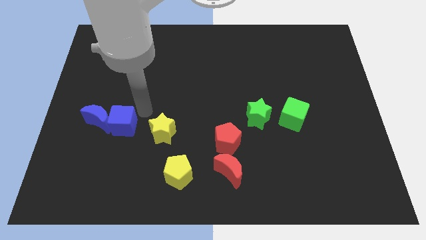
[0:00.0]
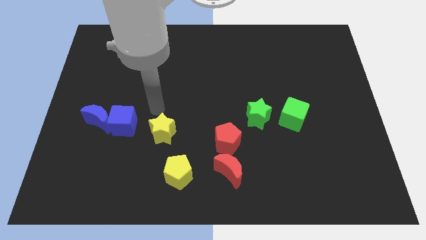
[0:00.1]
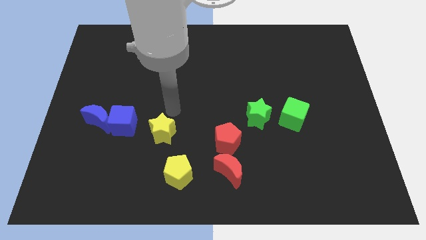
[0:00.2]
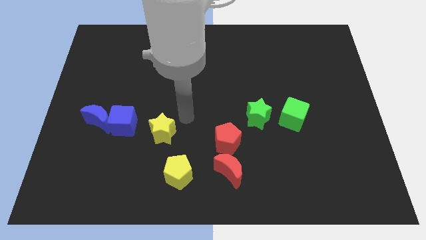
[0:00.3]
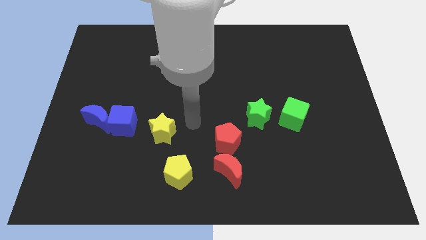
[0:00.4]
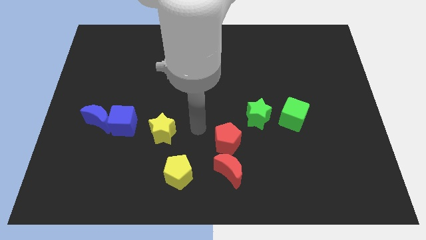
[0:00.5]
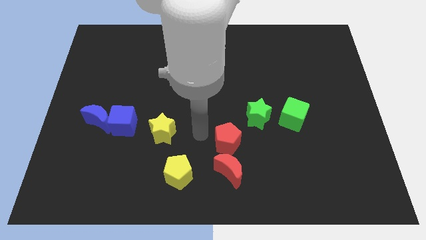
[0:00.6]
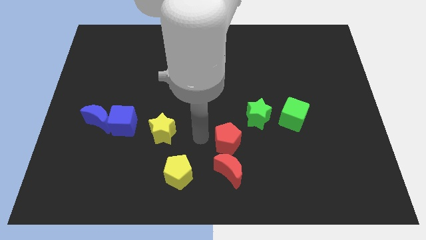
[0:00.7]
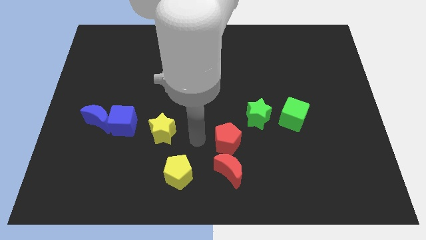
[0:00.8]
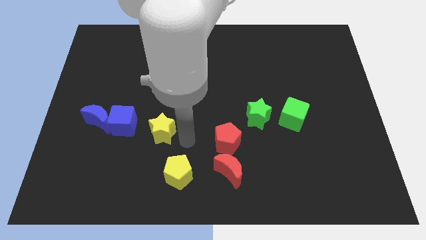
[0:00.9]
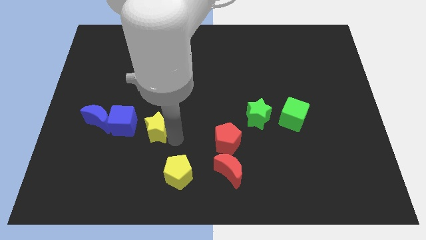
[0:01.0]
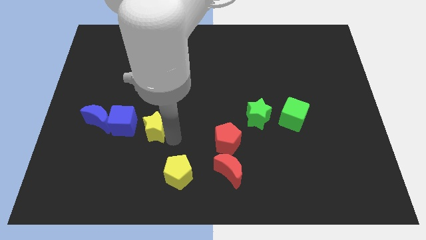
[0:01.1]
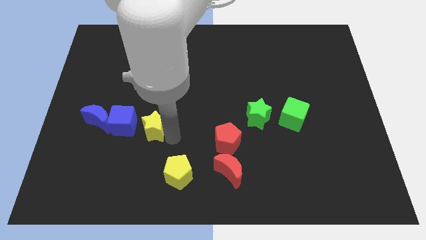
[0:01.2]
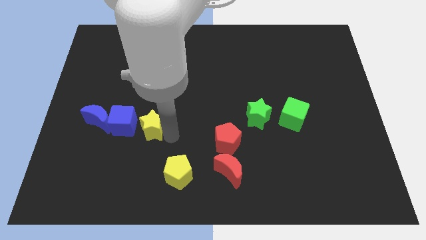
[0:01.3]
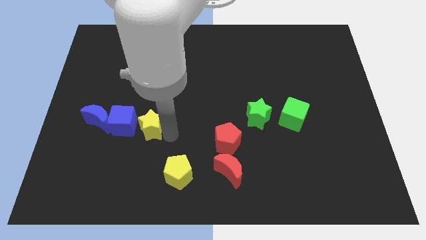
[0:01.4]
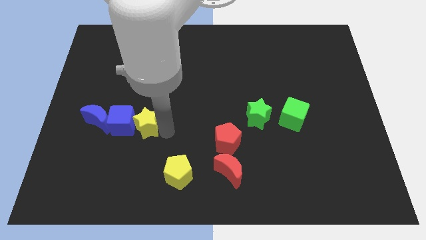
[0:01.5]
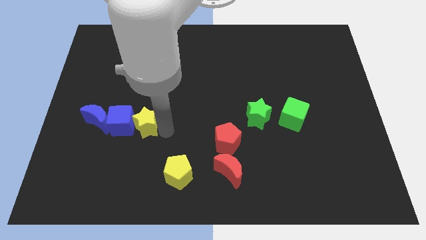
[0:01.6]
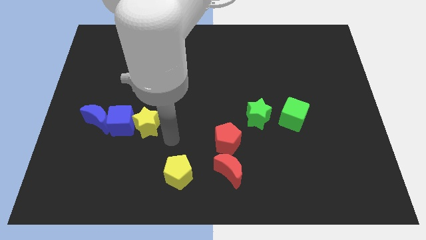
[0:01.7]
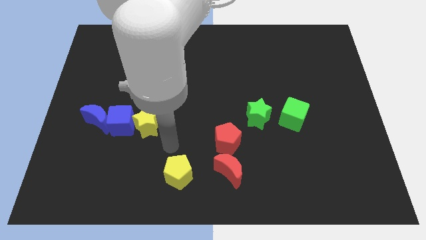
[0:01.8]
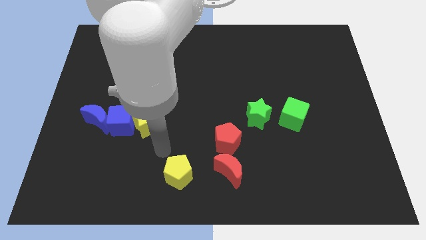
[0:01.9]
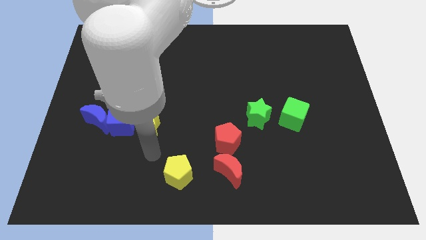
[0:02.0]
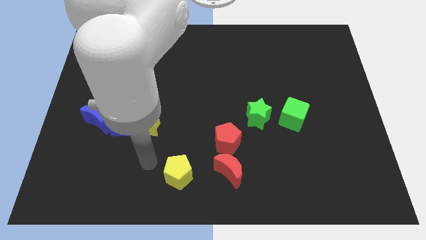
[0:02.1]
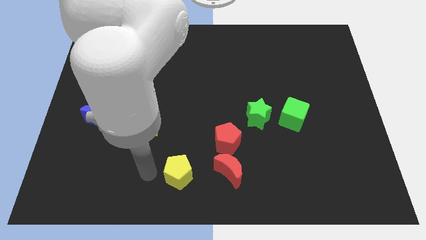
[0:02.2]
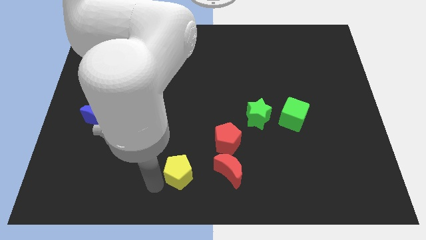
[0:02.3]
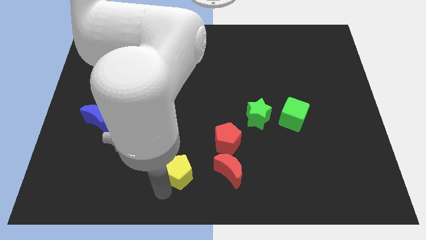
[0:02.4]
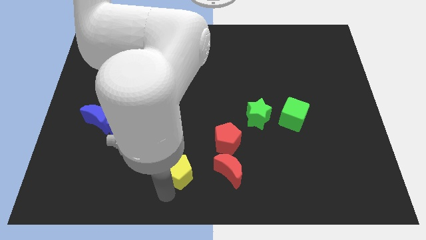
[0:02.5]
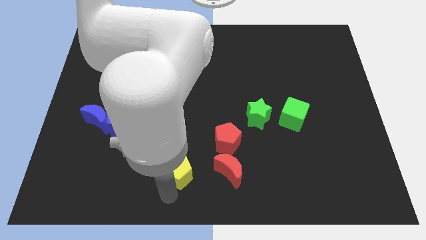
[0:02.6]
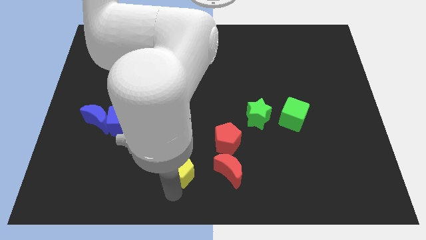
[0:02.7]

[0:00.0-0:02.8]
place the arm down to the yellow pentagon

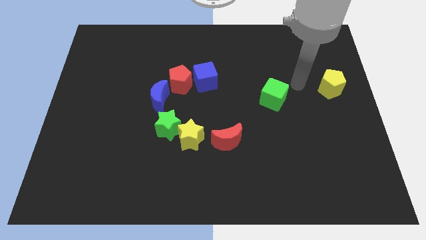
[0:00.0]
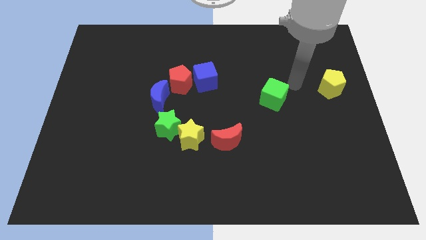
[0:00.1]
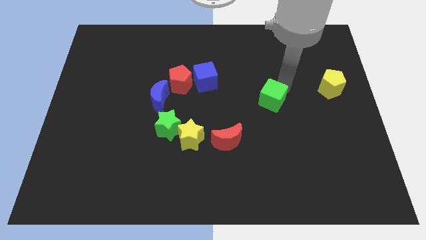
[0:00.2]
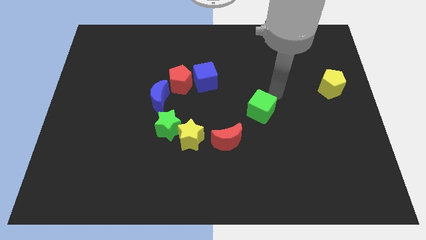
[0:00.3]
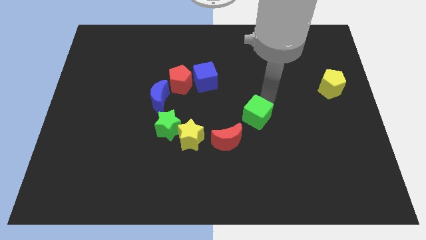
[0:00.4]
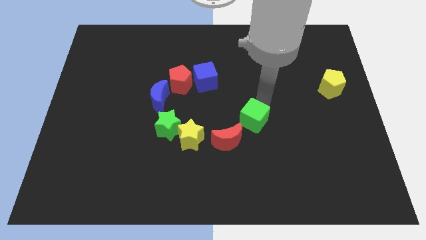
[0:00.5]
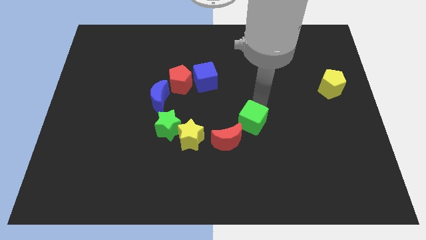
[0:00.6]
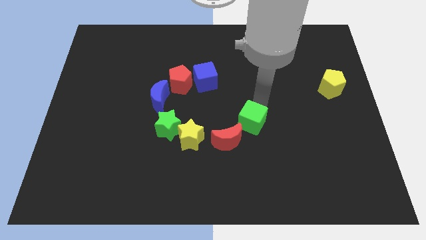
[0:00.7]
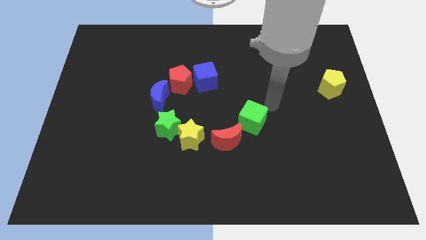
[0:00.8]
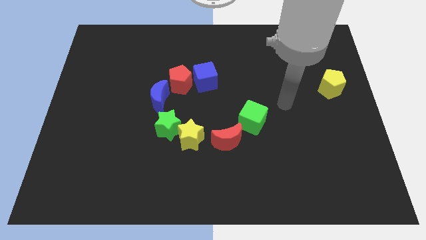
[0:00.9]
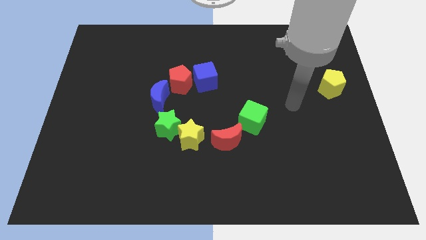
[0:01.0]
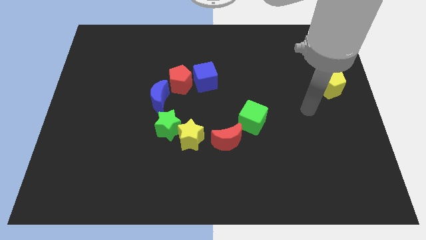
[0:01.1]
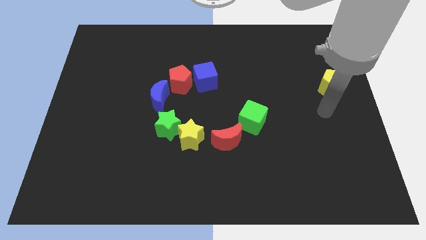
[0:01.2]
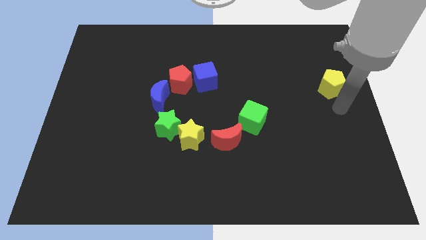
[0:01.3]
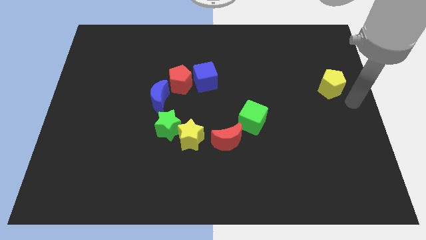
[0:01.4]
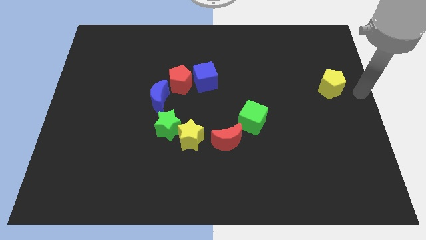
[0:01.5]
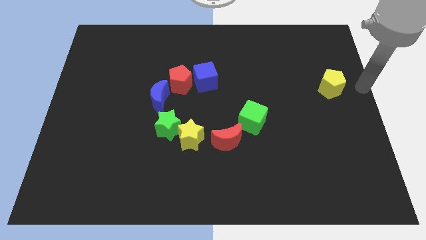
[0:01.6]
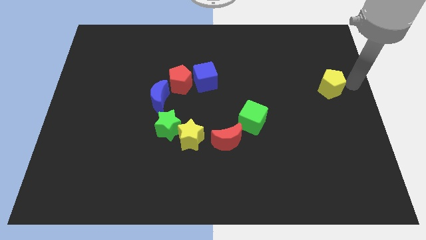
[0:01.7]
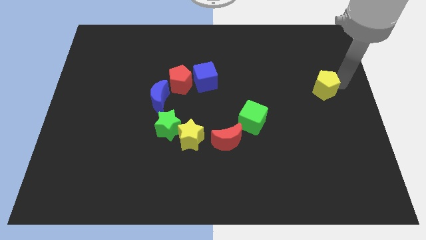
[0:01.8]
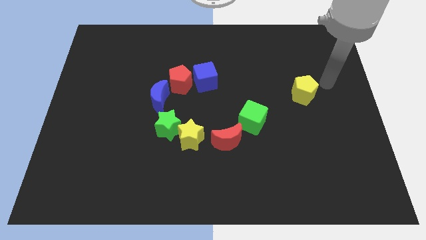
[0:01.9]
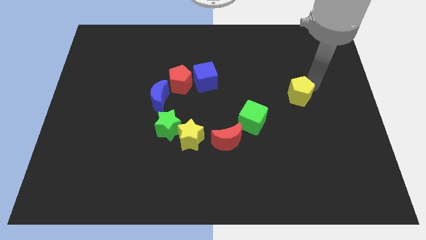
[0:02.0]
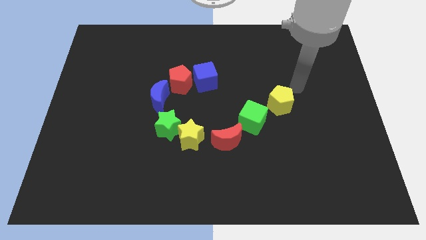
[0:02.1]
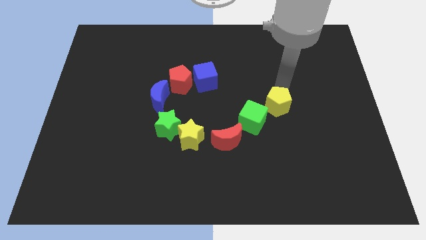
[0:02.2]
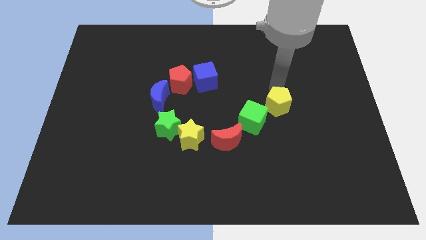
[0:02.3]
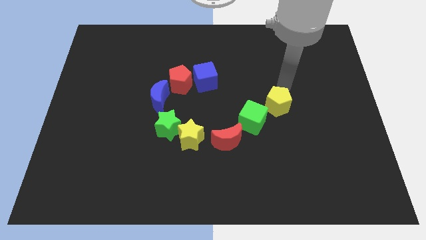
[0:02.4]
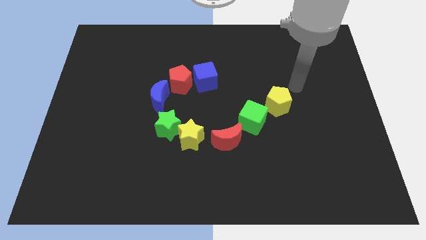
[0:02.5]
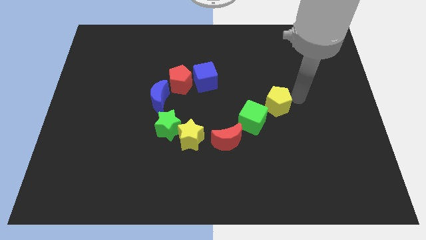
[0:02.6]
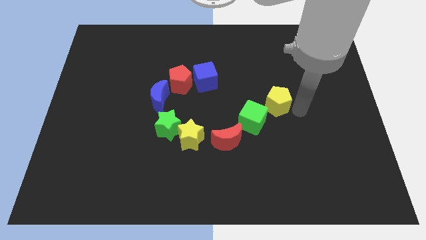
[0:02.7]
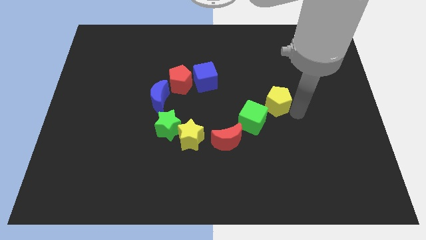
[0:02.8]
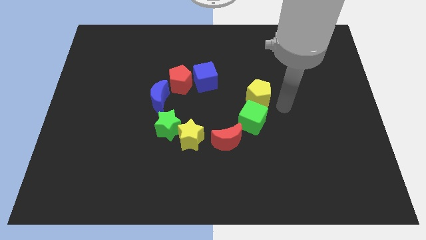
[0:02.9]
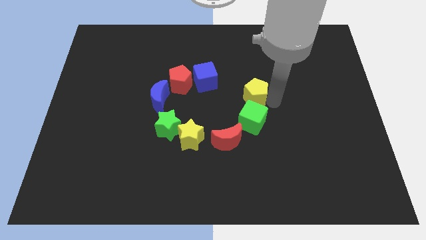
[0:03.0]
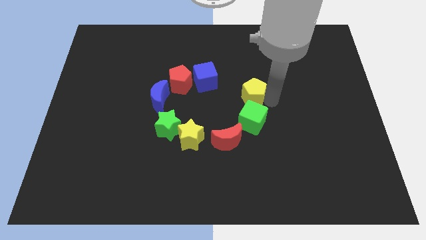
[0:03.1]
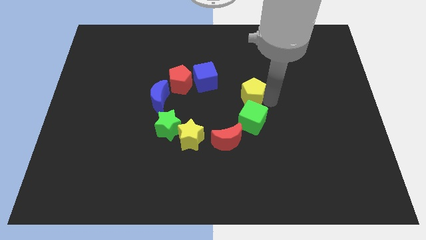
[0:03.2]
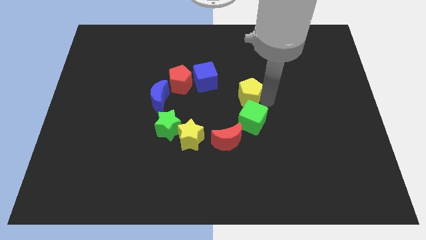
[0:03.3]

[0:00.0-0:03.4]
place yellow pentagon above the green cube

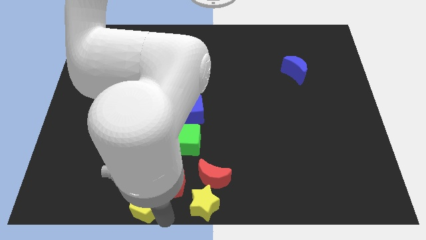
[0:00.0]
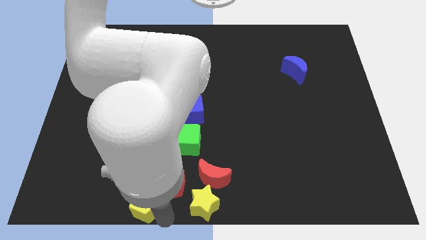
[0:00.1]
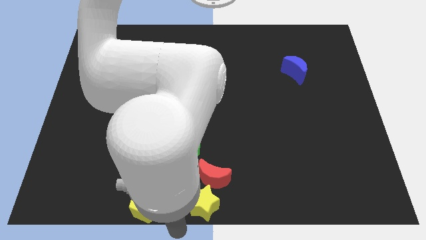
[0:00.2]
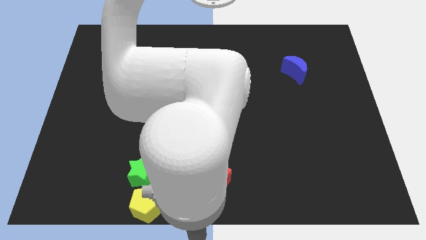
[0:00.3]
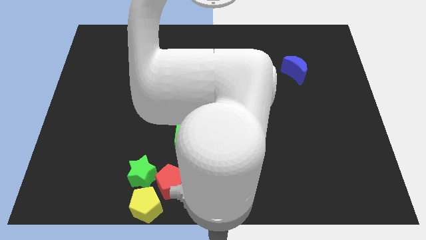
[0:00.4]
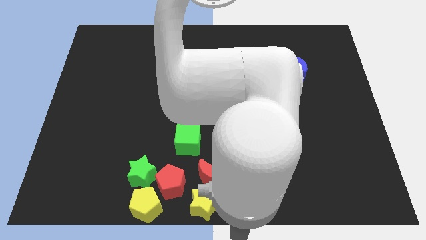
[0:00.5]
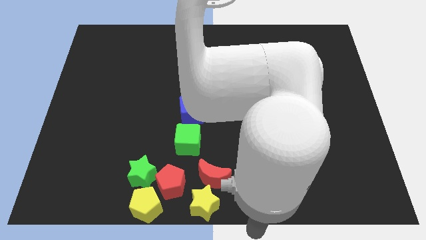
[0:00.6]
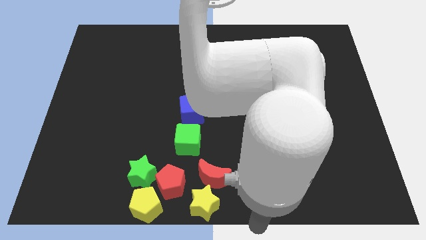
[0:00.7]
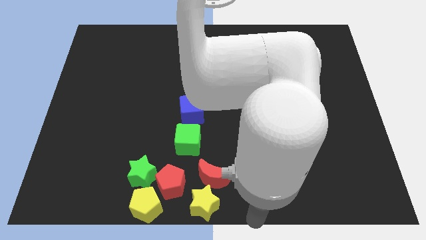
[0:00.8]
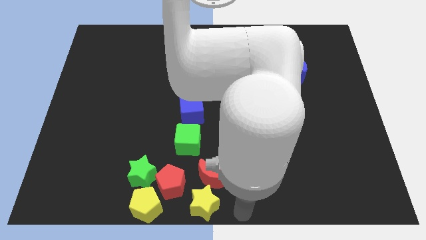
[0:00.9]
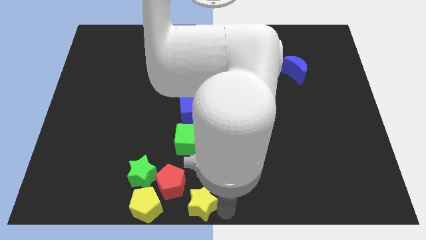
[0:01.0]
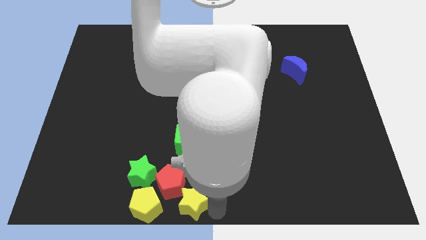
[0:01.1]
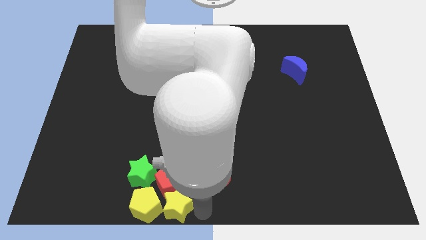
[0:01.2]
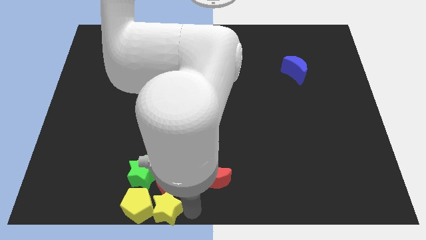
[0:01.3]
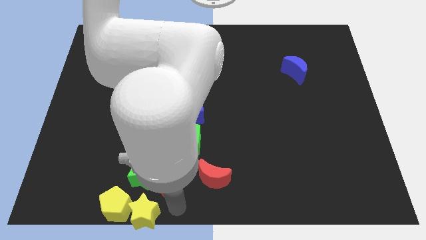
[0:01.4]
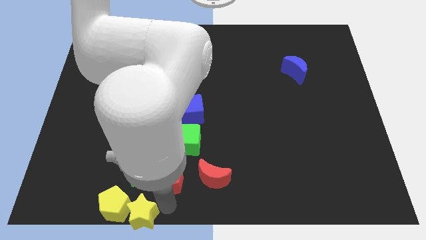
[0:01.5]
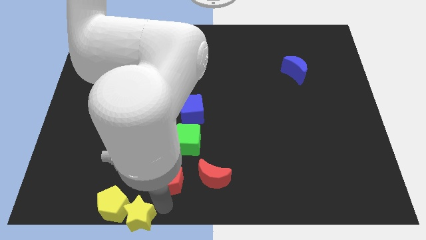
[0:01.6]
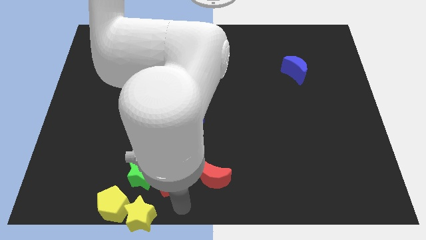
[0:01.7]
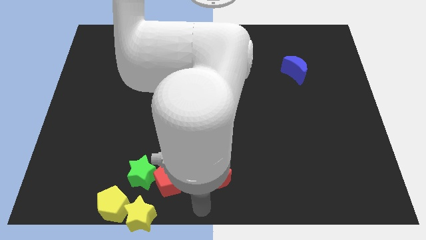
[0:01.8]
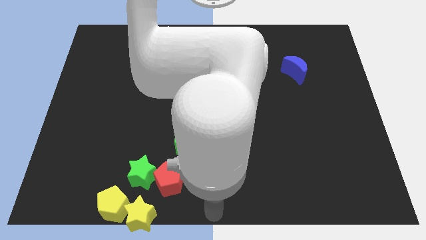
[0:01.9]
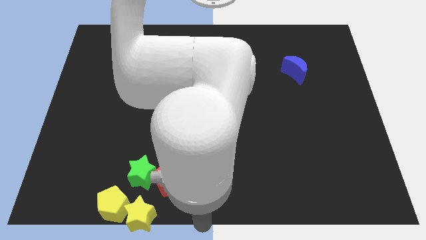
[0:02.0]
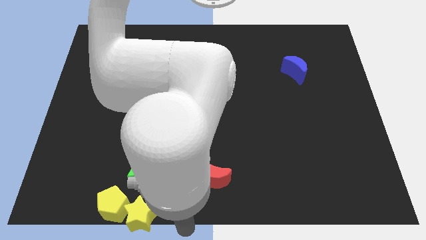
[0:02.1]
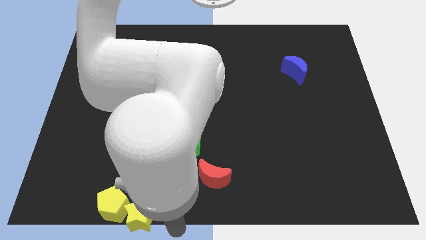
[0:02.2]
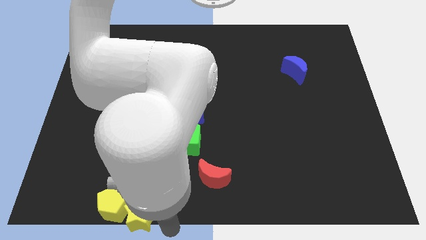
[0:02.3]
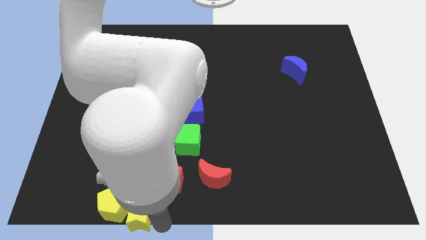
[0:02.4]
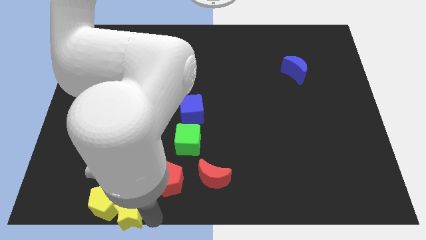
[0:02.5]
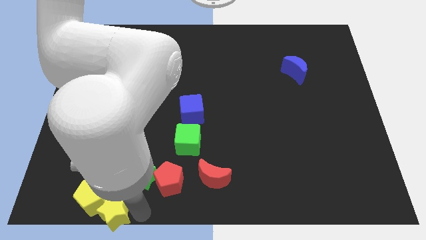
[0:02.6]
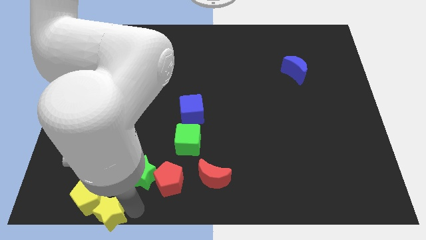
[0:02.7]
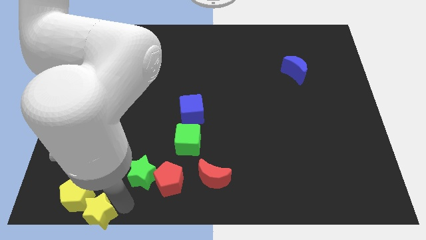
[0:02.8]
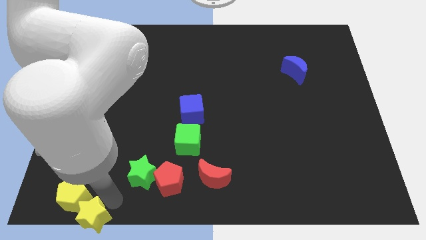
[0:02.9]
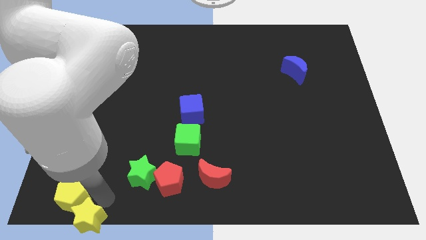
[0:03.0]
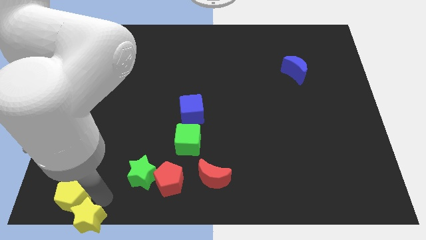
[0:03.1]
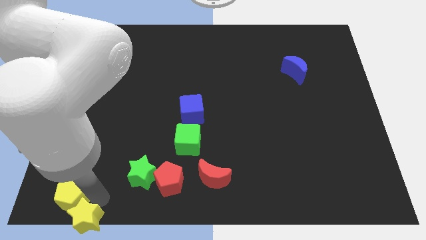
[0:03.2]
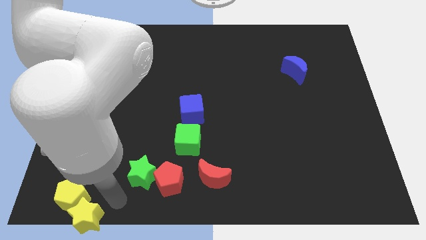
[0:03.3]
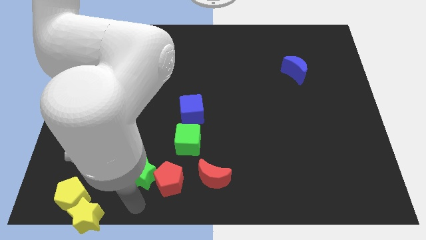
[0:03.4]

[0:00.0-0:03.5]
push the yellow star into the yellow pentagon
